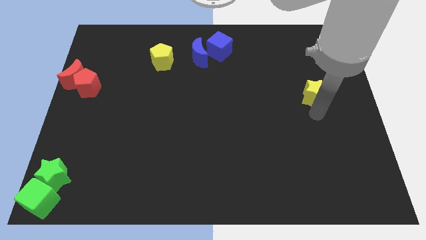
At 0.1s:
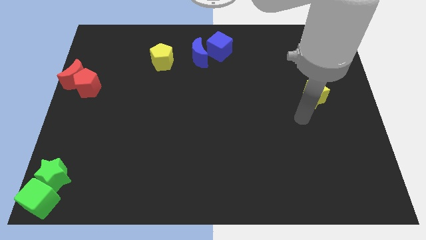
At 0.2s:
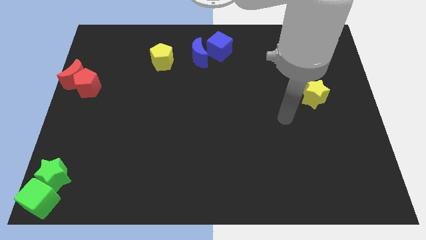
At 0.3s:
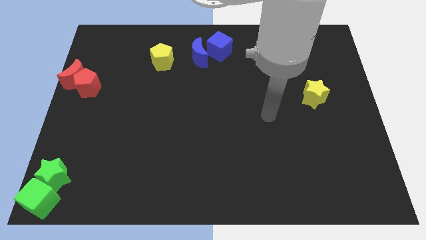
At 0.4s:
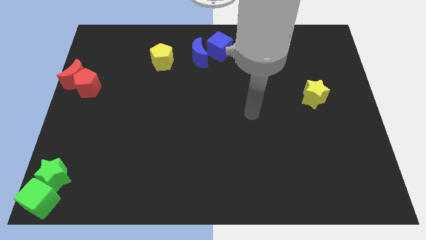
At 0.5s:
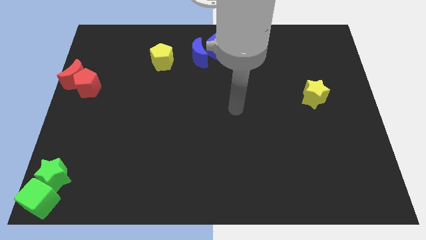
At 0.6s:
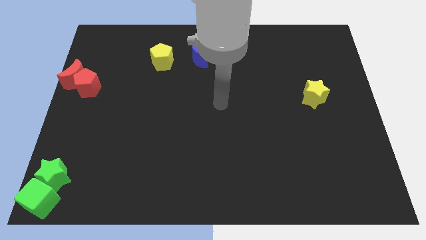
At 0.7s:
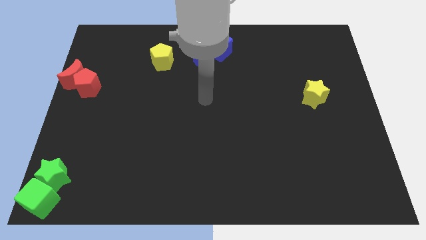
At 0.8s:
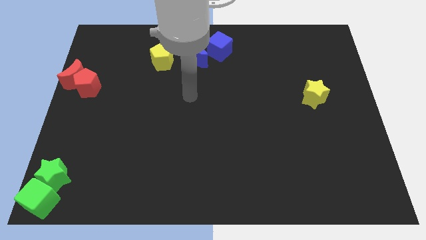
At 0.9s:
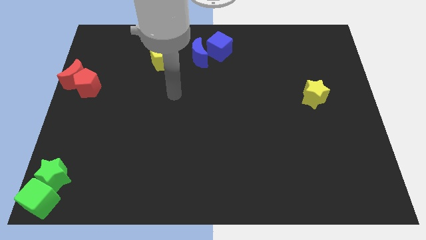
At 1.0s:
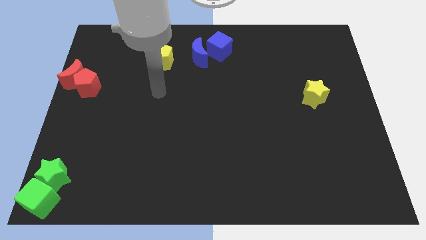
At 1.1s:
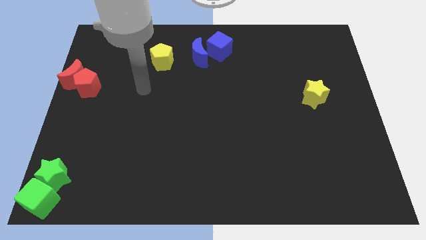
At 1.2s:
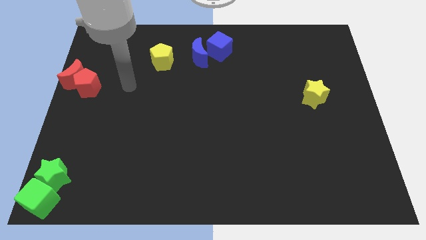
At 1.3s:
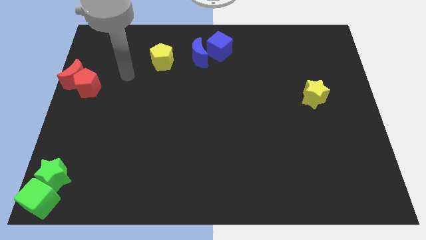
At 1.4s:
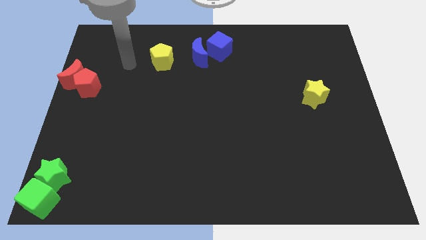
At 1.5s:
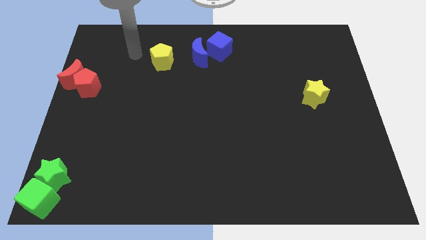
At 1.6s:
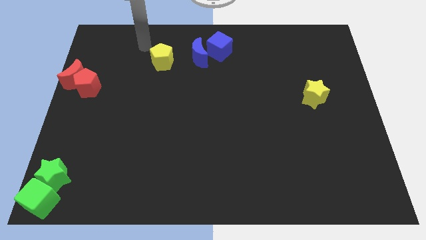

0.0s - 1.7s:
move your arm away from the yellow star

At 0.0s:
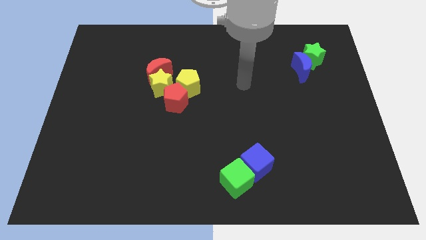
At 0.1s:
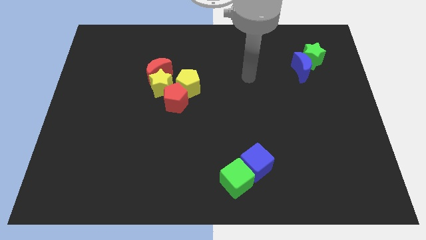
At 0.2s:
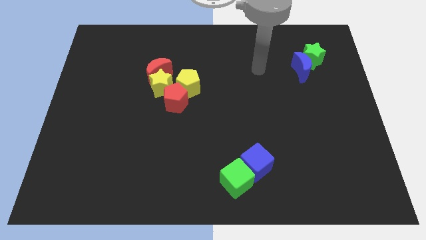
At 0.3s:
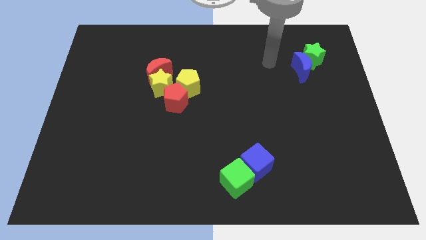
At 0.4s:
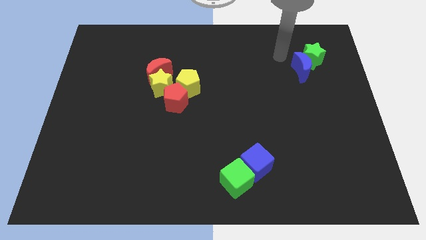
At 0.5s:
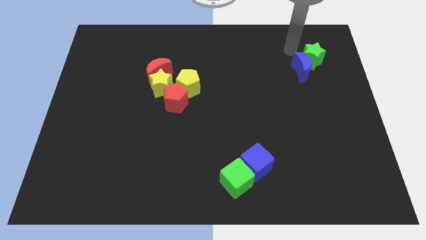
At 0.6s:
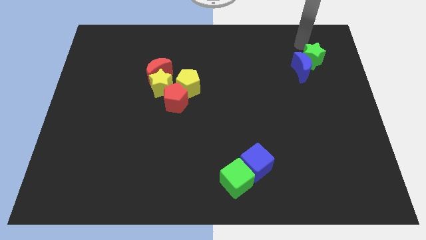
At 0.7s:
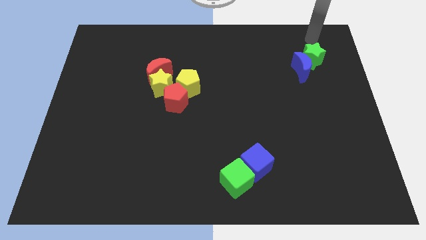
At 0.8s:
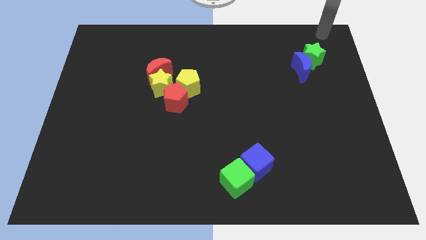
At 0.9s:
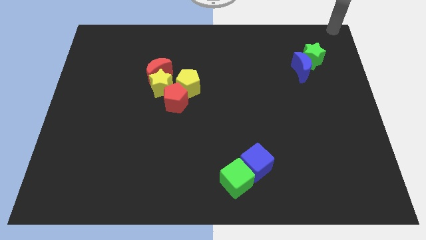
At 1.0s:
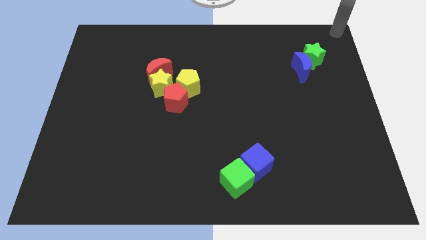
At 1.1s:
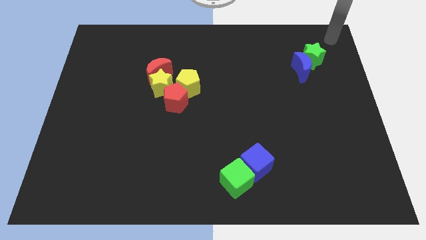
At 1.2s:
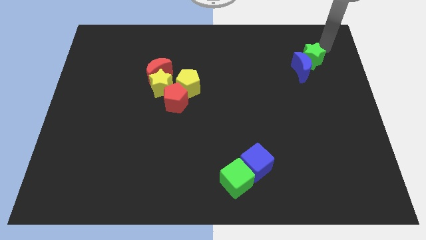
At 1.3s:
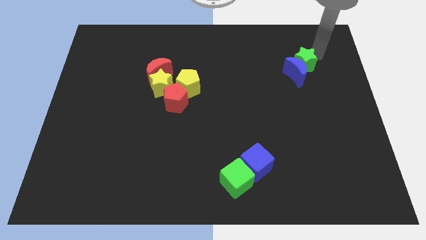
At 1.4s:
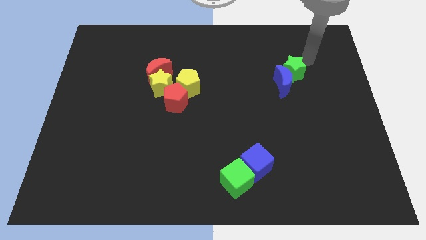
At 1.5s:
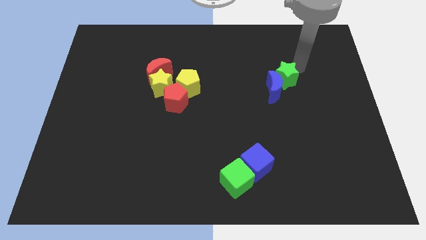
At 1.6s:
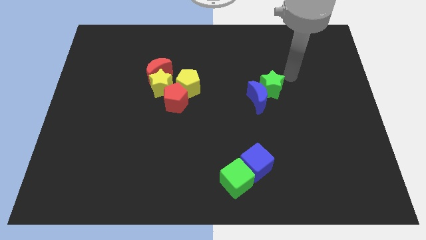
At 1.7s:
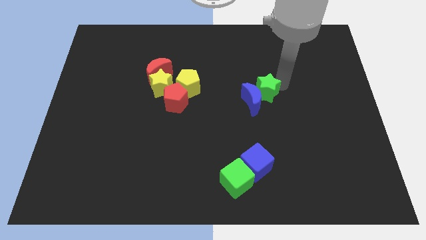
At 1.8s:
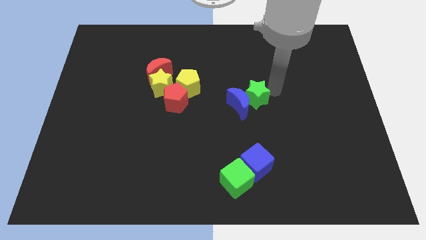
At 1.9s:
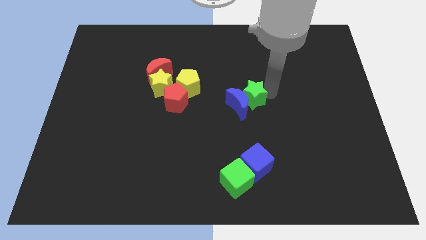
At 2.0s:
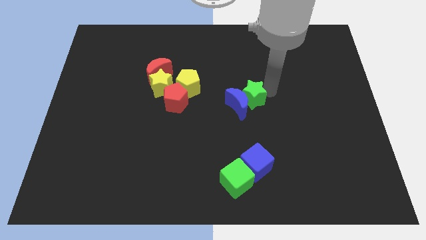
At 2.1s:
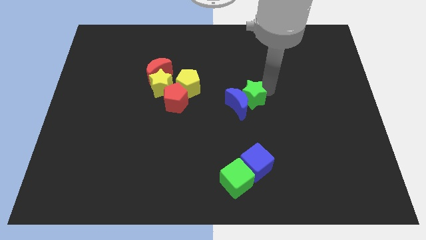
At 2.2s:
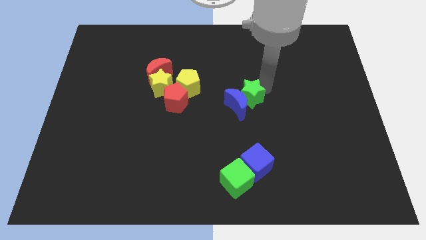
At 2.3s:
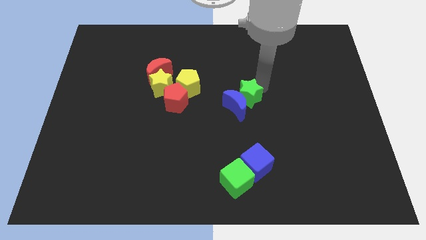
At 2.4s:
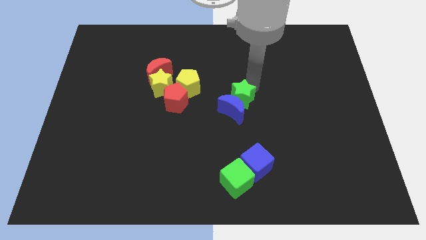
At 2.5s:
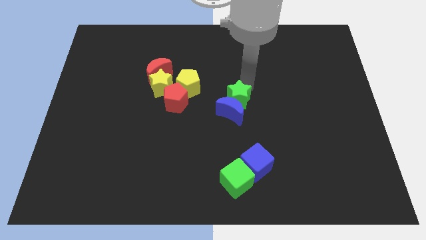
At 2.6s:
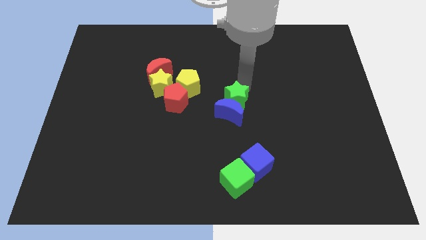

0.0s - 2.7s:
push the blue crescent towards the center of the board with the help of the green star

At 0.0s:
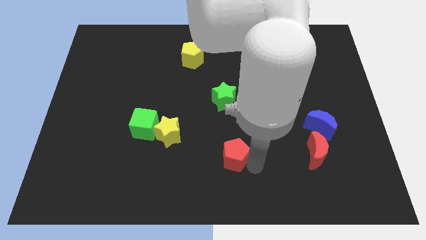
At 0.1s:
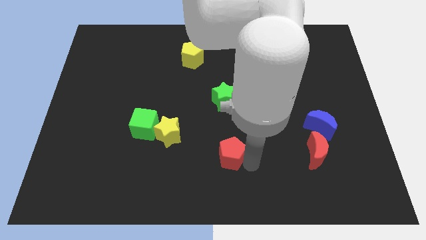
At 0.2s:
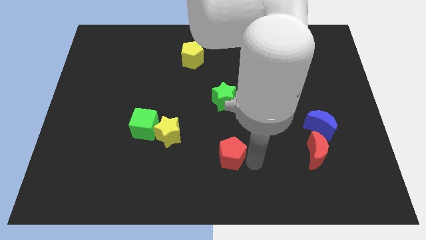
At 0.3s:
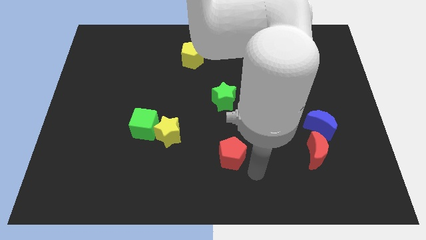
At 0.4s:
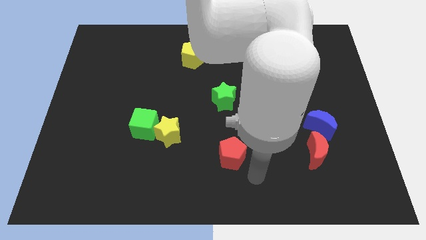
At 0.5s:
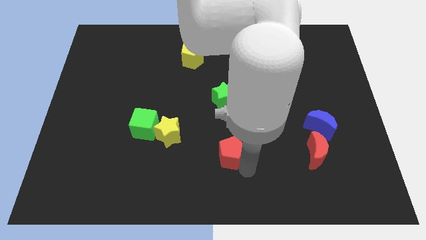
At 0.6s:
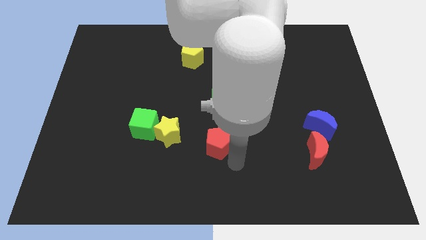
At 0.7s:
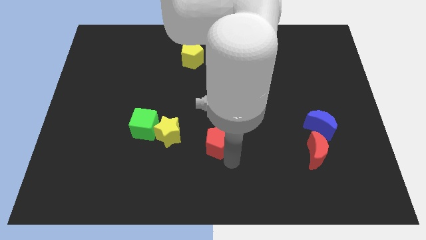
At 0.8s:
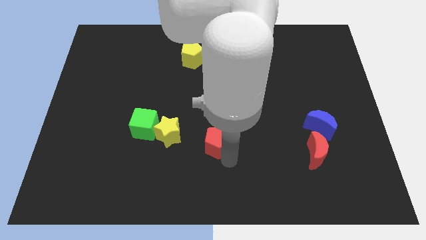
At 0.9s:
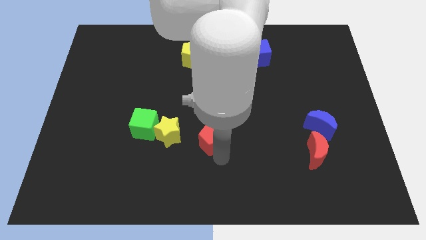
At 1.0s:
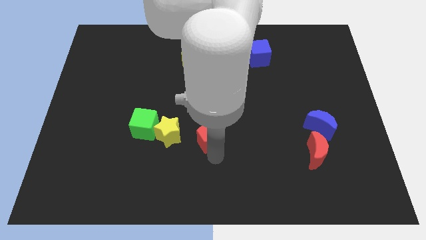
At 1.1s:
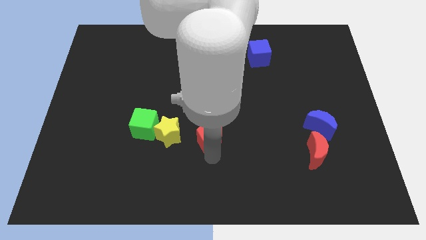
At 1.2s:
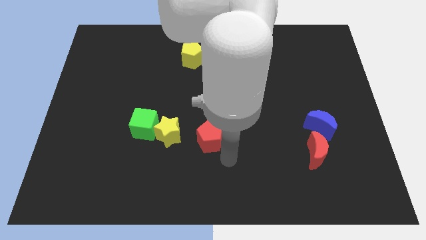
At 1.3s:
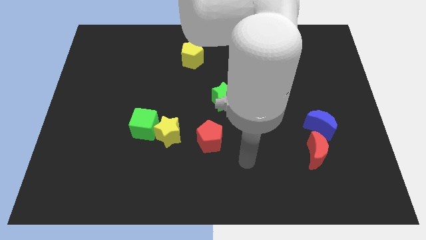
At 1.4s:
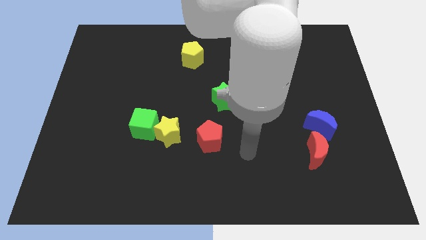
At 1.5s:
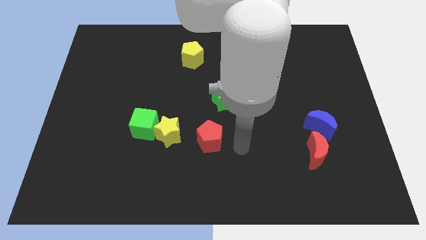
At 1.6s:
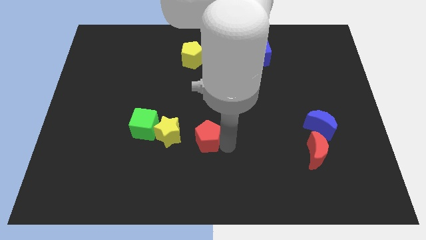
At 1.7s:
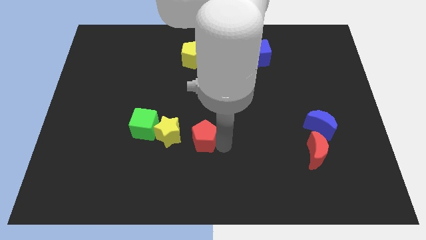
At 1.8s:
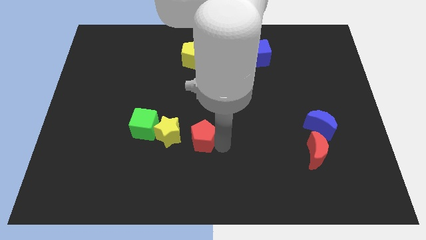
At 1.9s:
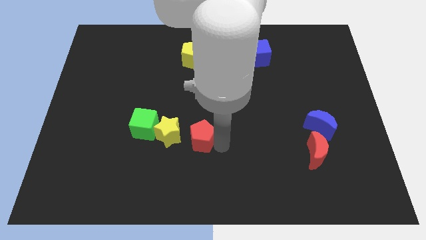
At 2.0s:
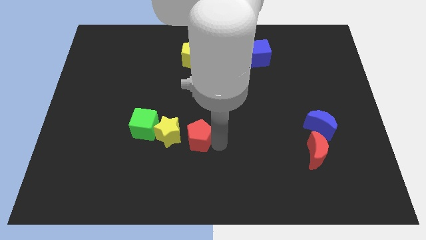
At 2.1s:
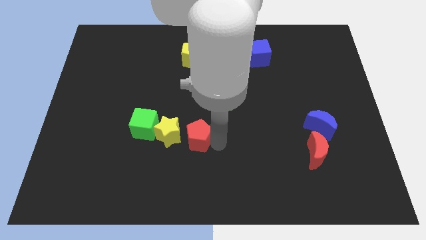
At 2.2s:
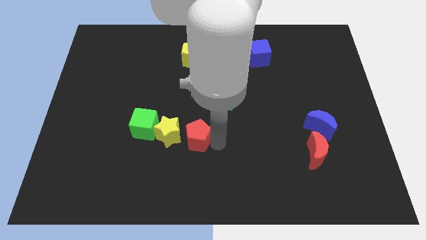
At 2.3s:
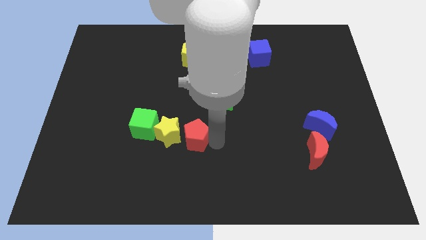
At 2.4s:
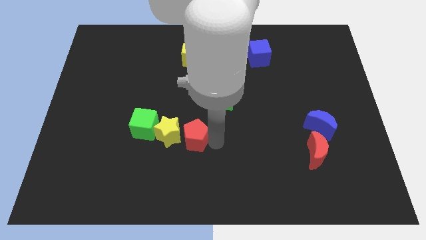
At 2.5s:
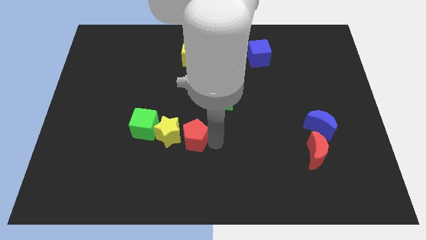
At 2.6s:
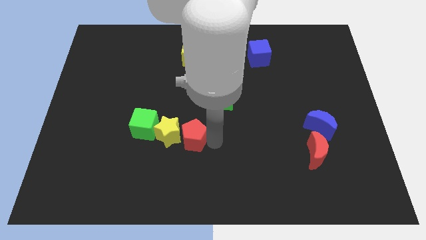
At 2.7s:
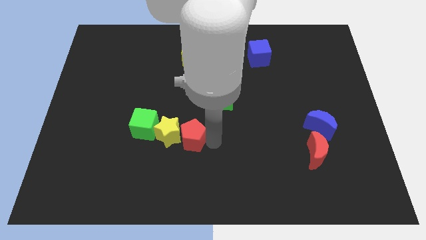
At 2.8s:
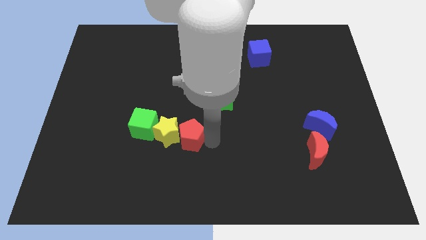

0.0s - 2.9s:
move the red pentagon into the yellow star

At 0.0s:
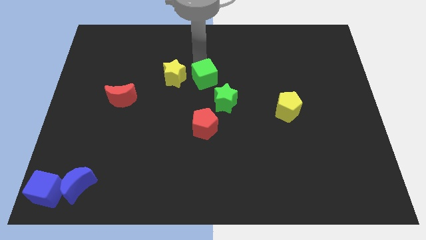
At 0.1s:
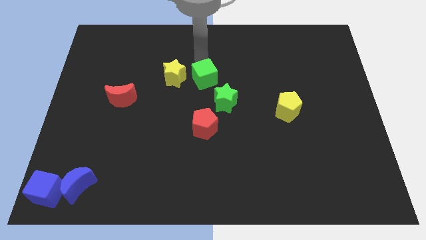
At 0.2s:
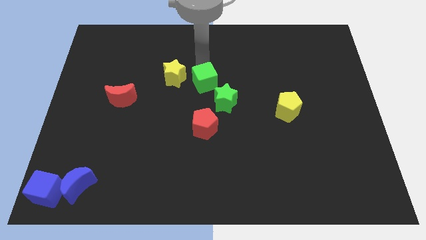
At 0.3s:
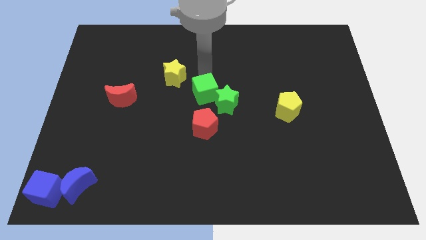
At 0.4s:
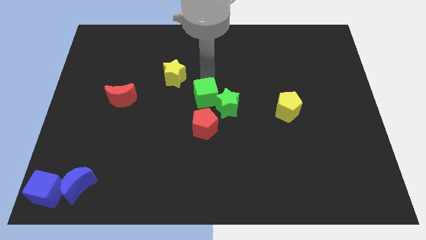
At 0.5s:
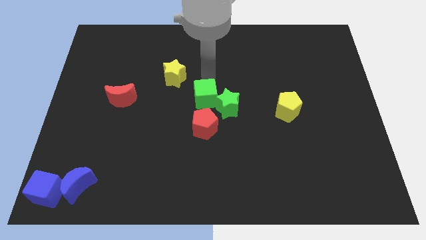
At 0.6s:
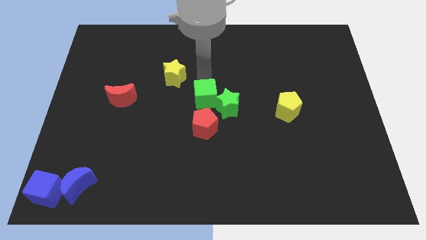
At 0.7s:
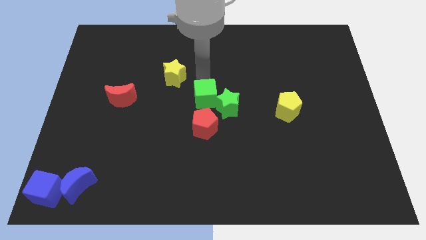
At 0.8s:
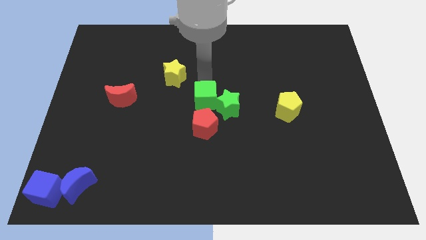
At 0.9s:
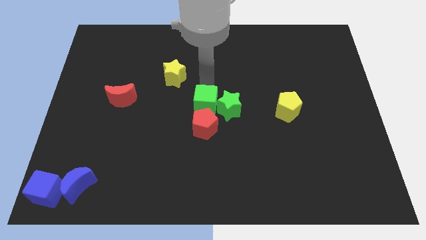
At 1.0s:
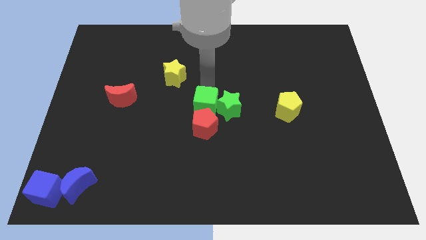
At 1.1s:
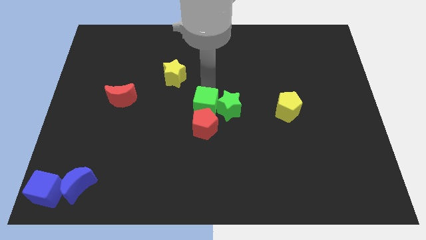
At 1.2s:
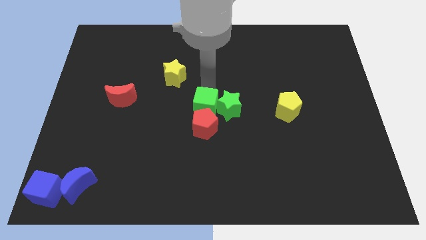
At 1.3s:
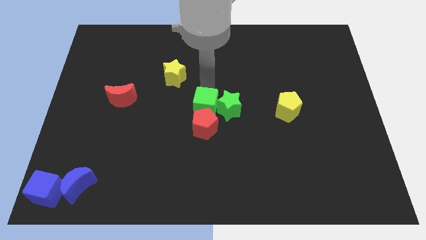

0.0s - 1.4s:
move the green cube to the left of the green star

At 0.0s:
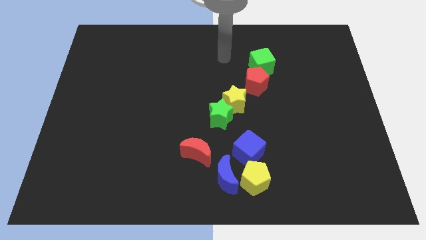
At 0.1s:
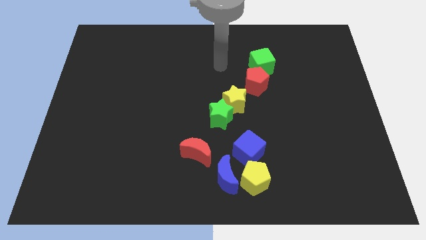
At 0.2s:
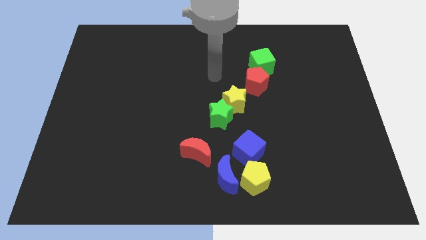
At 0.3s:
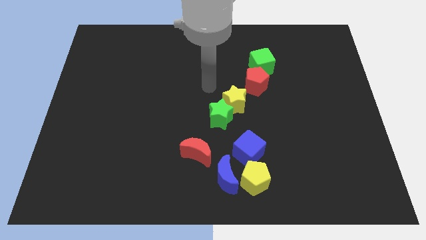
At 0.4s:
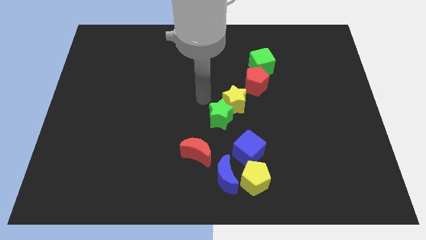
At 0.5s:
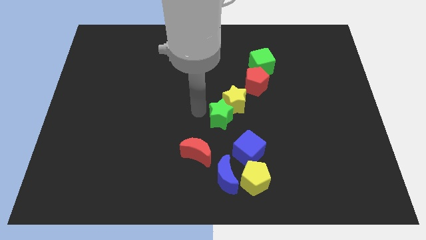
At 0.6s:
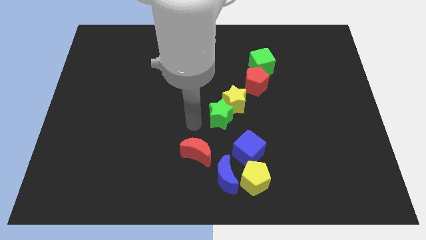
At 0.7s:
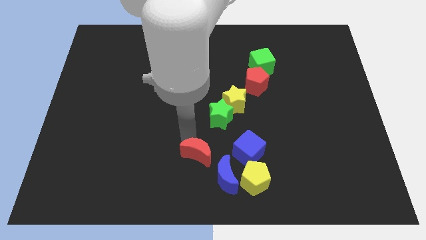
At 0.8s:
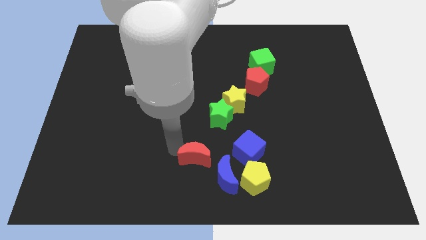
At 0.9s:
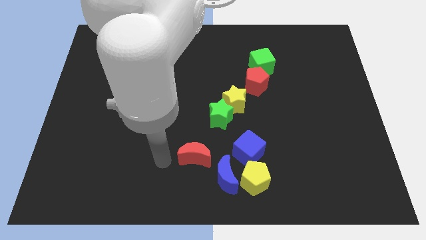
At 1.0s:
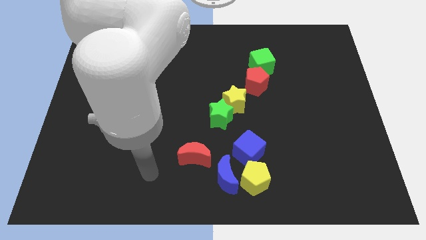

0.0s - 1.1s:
touch the right side of the red crescent
